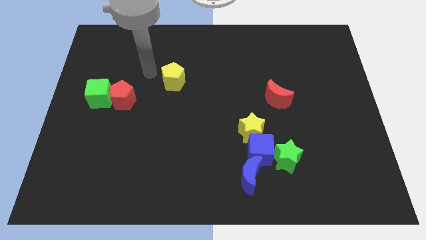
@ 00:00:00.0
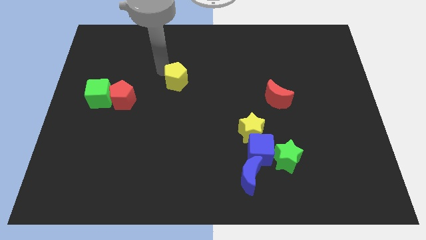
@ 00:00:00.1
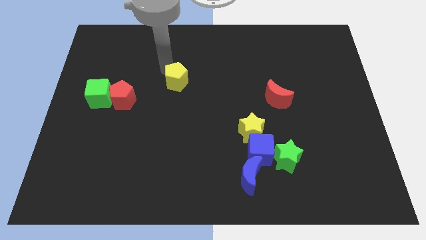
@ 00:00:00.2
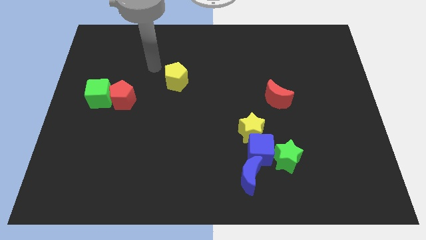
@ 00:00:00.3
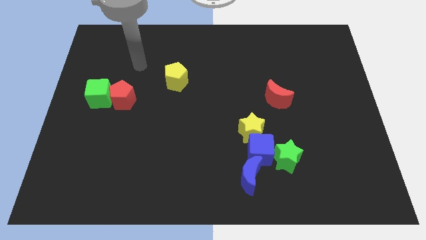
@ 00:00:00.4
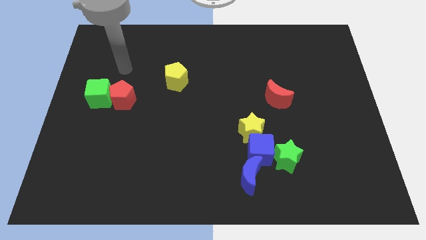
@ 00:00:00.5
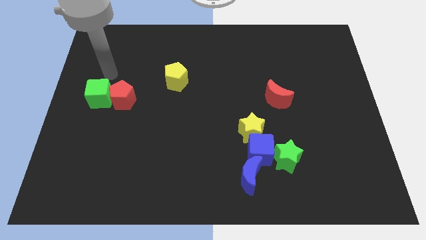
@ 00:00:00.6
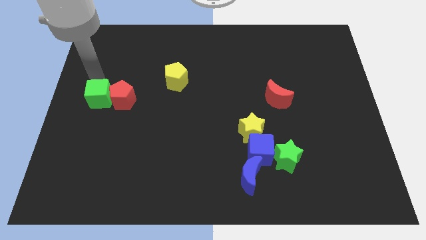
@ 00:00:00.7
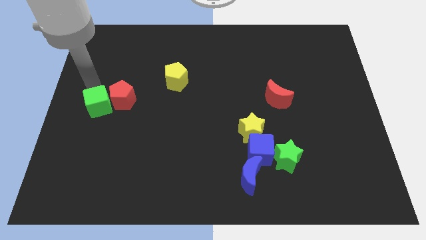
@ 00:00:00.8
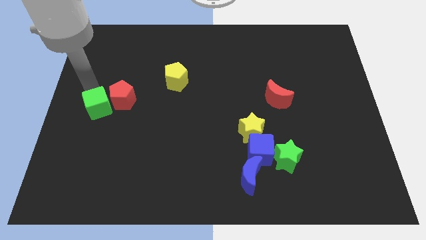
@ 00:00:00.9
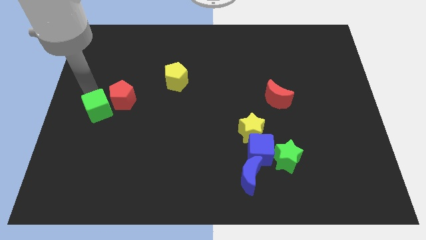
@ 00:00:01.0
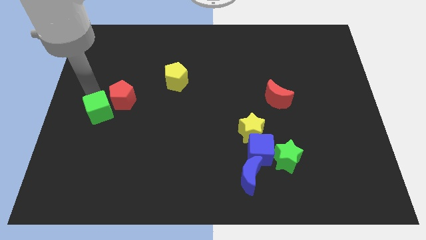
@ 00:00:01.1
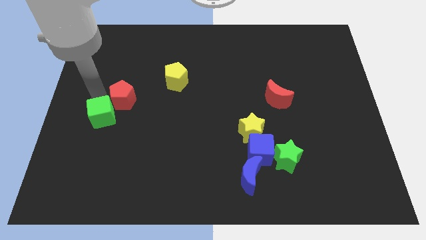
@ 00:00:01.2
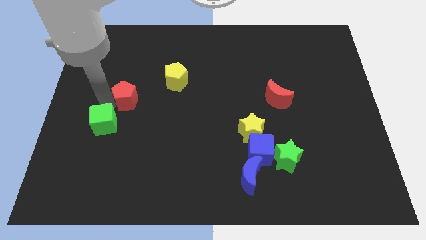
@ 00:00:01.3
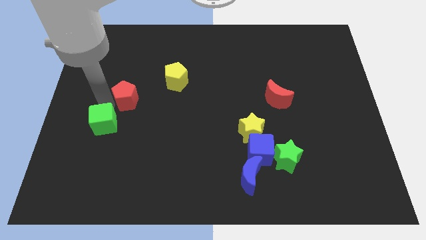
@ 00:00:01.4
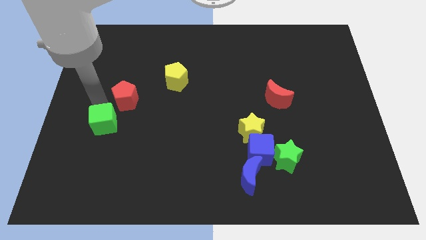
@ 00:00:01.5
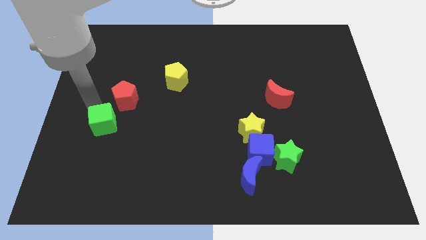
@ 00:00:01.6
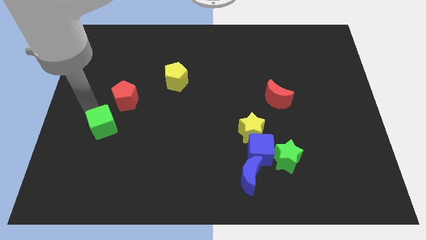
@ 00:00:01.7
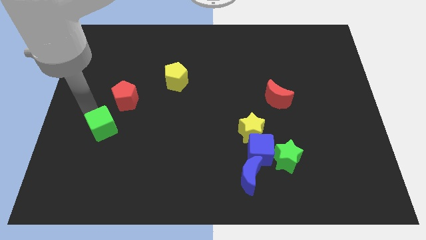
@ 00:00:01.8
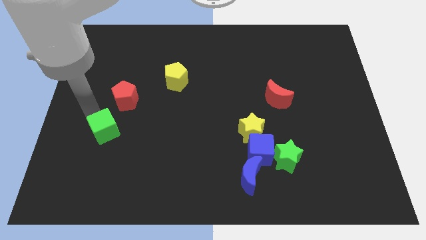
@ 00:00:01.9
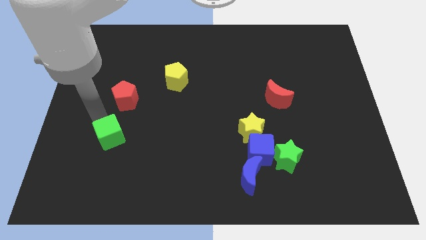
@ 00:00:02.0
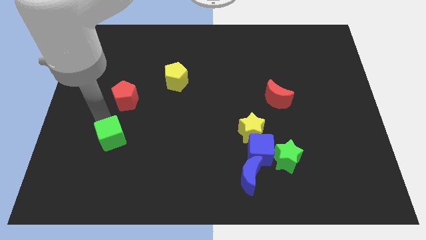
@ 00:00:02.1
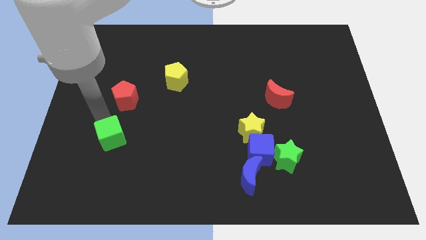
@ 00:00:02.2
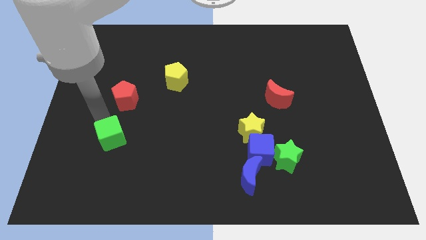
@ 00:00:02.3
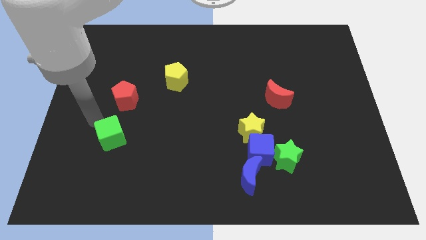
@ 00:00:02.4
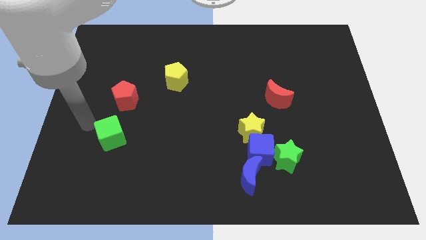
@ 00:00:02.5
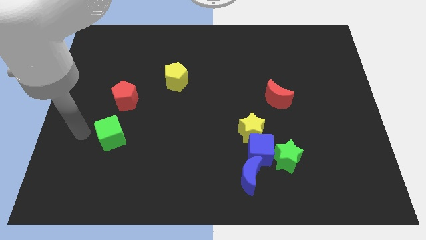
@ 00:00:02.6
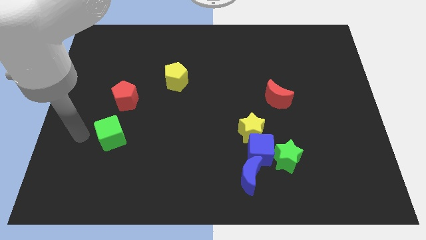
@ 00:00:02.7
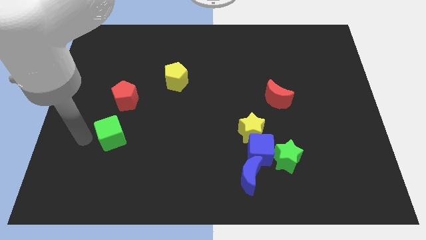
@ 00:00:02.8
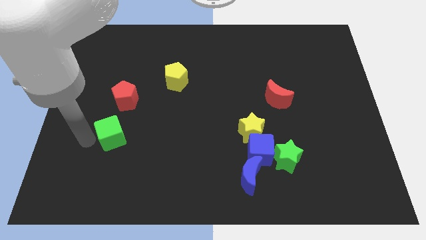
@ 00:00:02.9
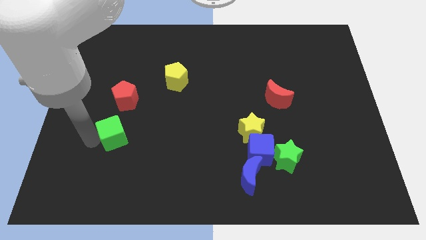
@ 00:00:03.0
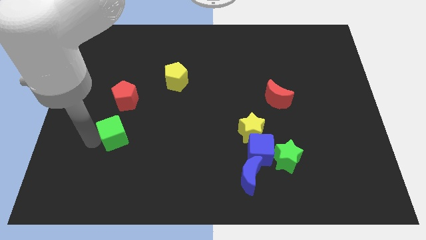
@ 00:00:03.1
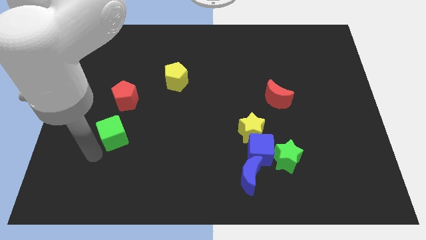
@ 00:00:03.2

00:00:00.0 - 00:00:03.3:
push the green cube to the bottom of the red pentagon

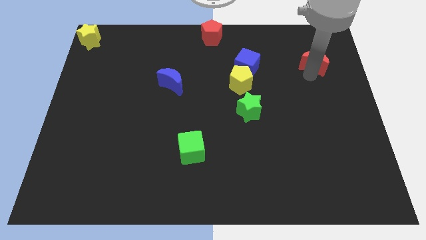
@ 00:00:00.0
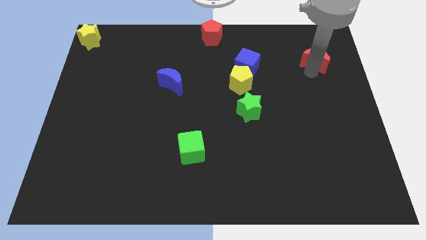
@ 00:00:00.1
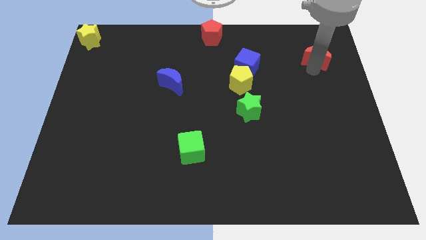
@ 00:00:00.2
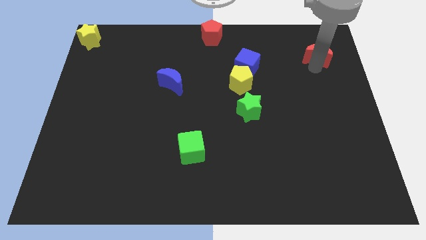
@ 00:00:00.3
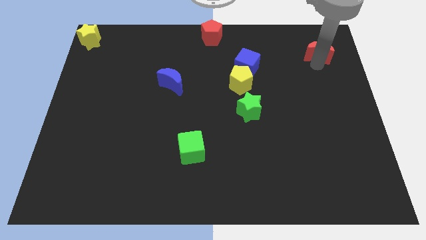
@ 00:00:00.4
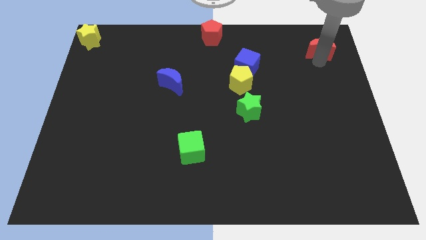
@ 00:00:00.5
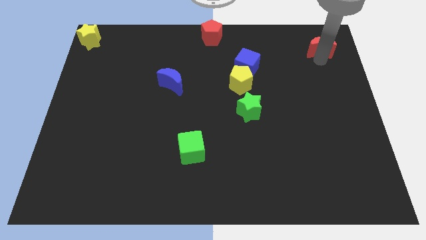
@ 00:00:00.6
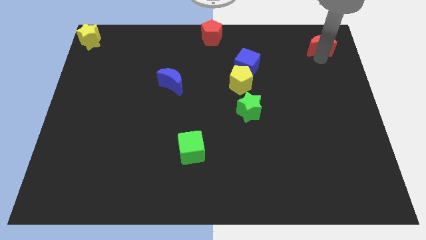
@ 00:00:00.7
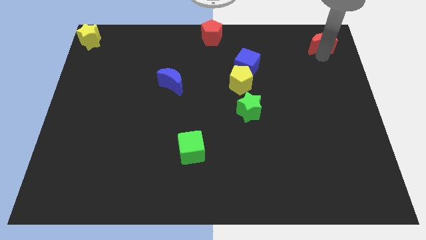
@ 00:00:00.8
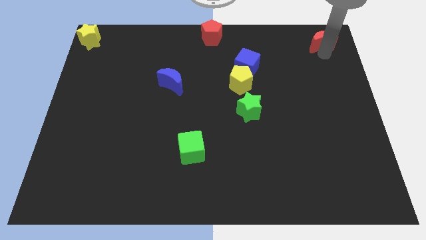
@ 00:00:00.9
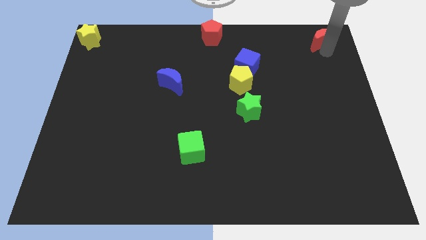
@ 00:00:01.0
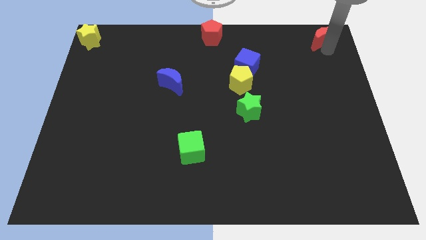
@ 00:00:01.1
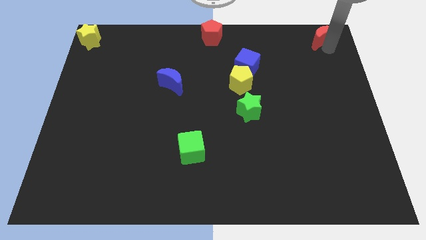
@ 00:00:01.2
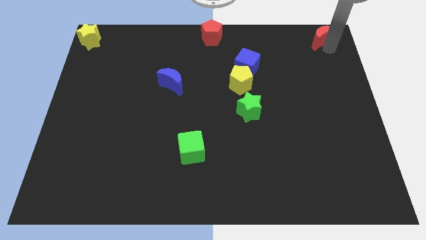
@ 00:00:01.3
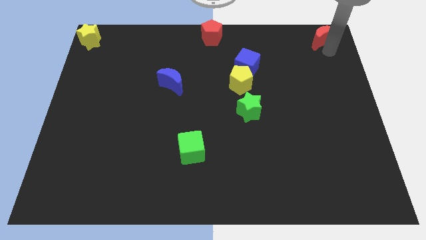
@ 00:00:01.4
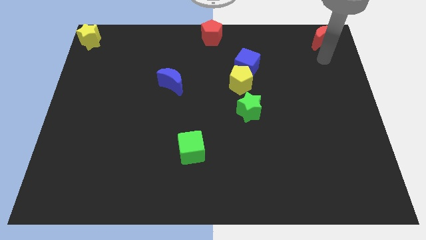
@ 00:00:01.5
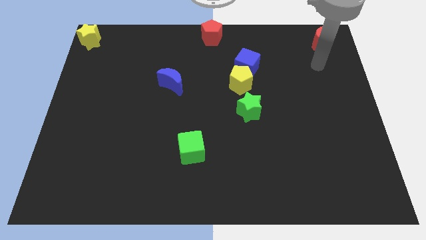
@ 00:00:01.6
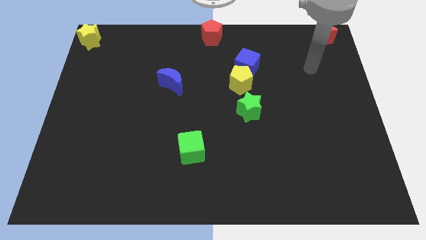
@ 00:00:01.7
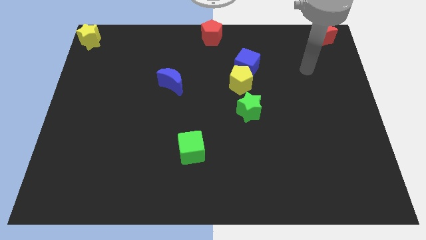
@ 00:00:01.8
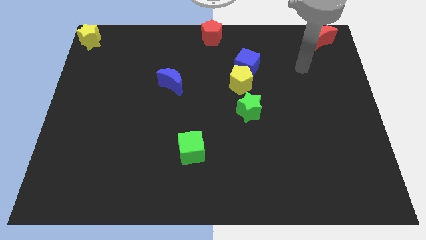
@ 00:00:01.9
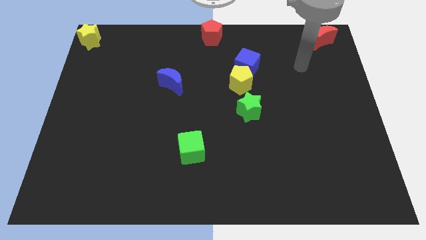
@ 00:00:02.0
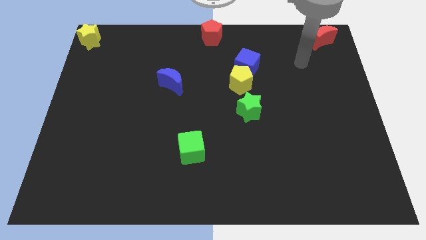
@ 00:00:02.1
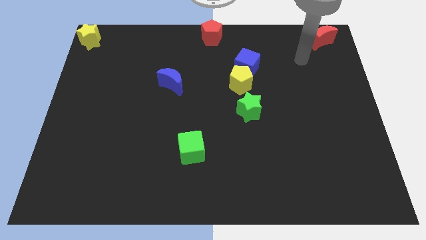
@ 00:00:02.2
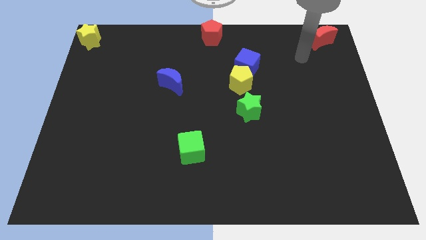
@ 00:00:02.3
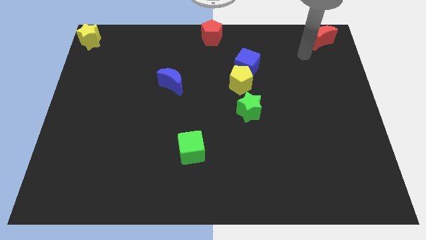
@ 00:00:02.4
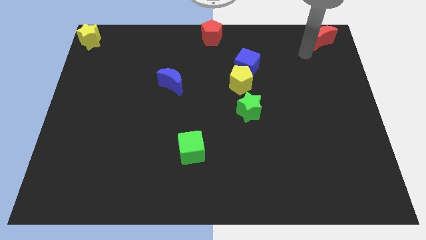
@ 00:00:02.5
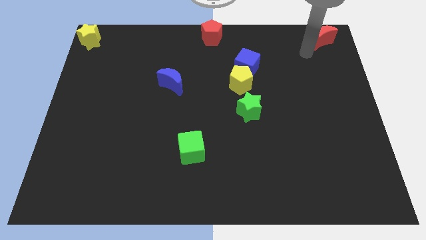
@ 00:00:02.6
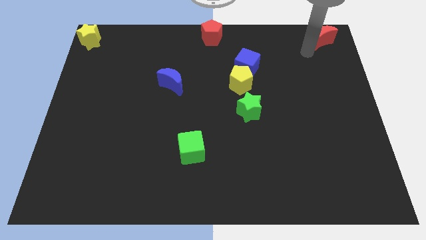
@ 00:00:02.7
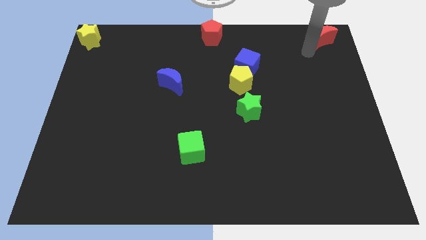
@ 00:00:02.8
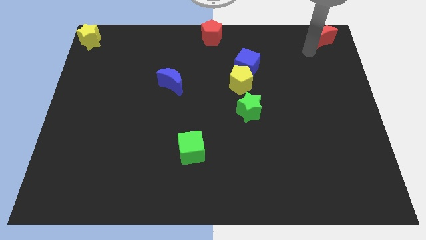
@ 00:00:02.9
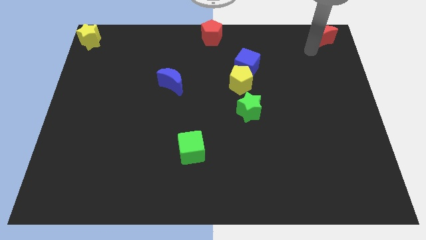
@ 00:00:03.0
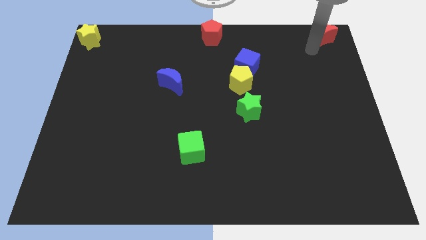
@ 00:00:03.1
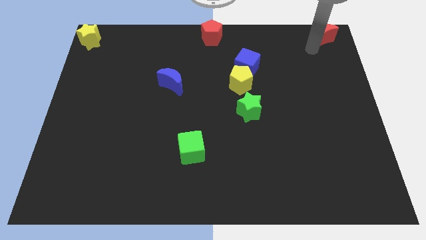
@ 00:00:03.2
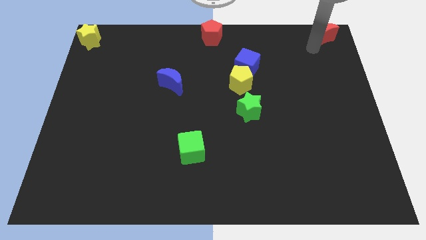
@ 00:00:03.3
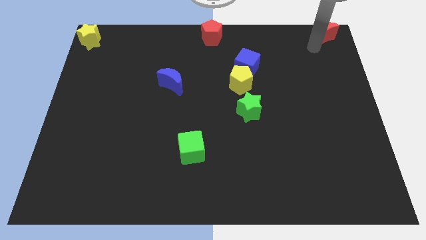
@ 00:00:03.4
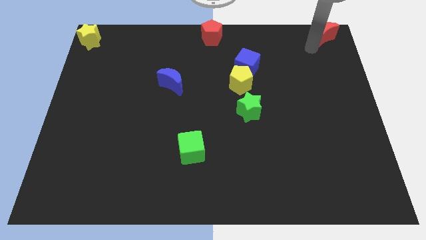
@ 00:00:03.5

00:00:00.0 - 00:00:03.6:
place red crescent on the right corner of the board

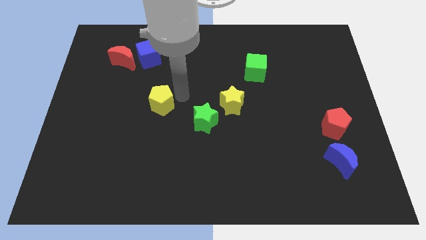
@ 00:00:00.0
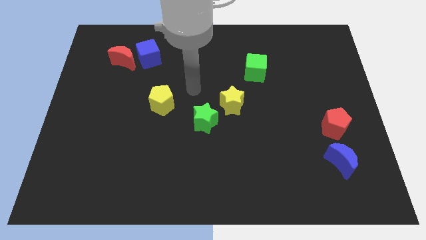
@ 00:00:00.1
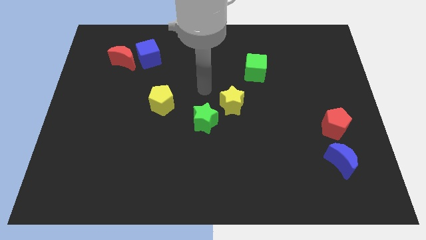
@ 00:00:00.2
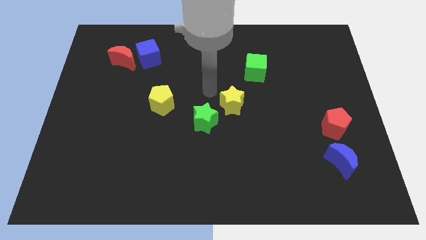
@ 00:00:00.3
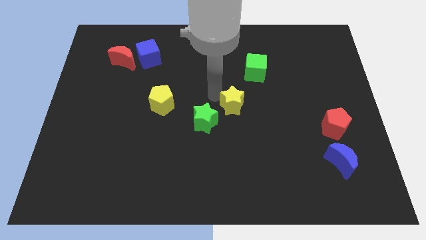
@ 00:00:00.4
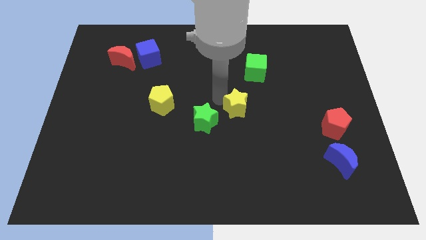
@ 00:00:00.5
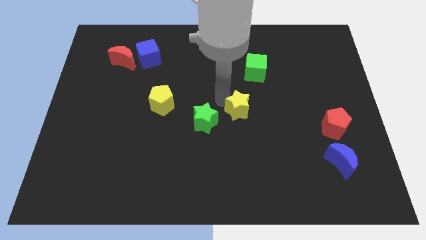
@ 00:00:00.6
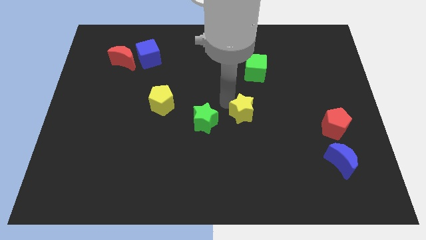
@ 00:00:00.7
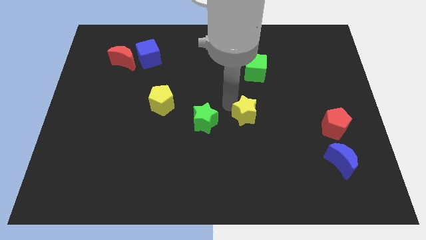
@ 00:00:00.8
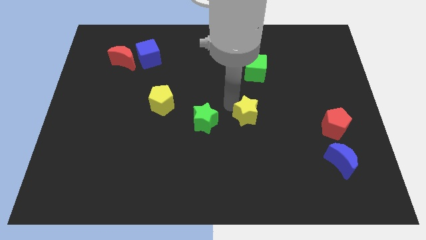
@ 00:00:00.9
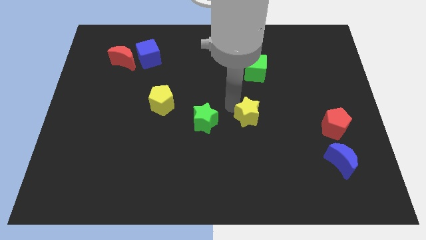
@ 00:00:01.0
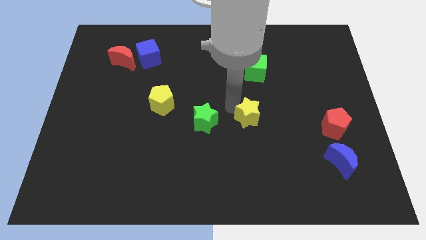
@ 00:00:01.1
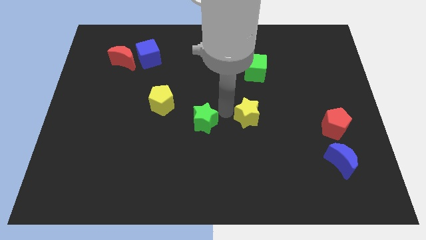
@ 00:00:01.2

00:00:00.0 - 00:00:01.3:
push the yellow star below the green cube

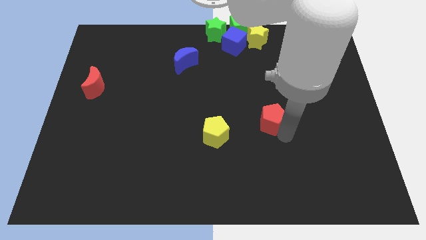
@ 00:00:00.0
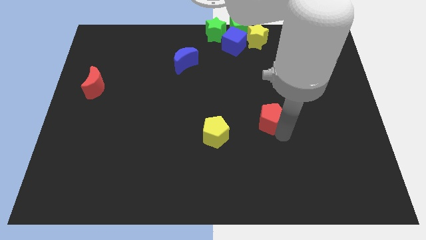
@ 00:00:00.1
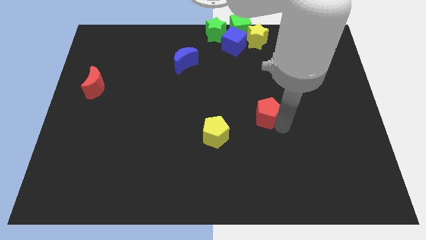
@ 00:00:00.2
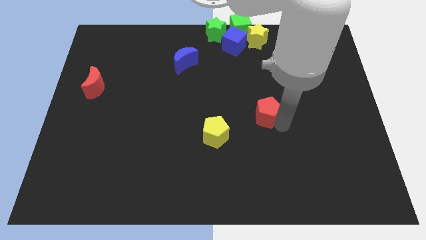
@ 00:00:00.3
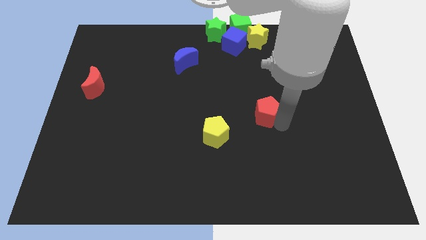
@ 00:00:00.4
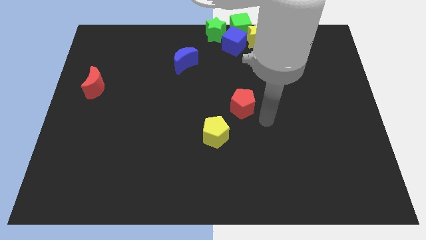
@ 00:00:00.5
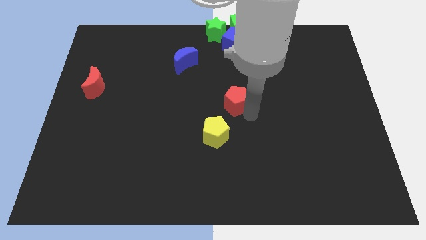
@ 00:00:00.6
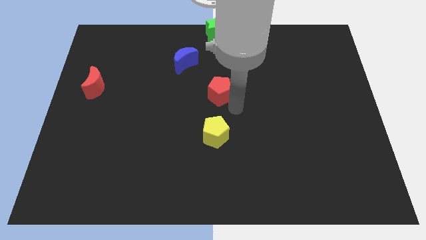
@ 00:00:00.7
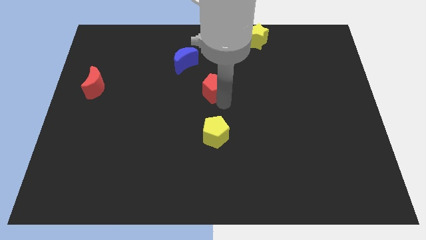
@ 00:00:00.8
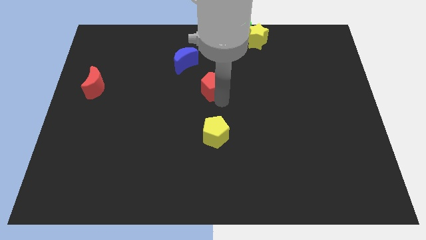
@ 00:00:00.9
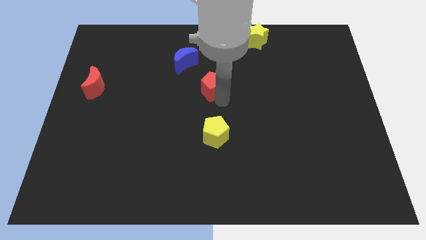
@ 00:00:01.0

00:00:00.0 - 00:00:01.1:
place the red pentagon vertically above the yellow pentagon
